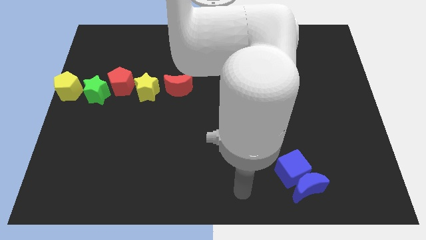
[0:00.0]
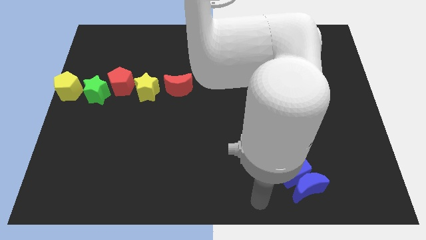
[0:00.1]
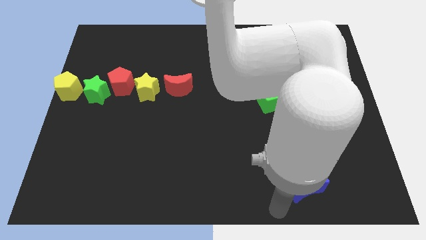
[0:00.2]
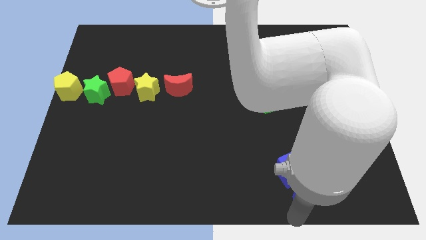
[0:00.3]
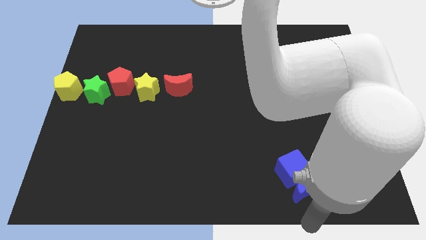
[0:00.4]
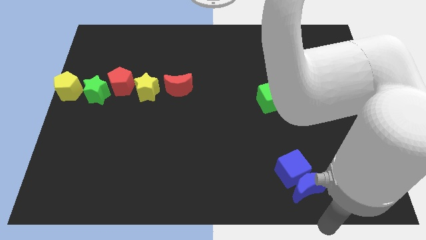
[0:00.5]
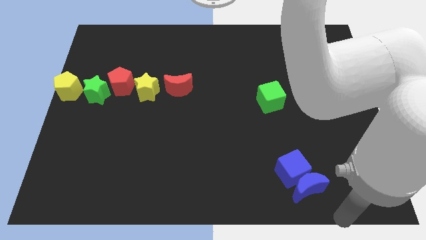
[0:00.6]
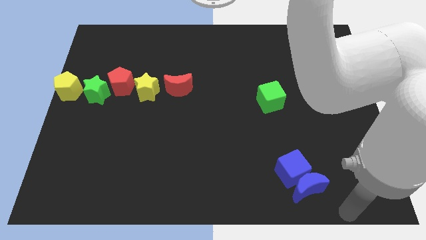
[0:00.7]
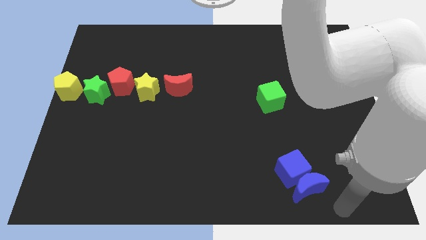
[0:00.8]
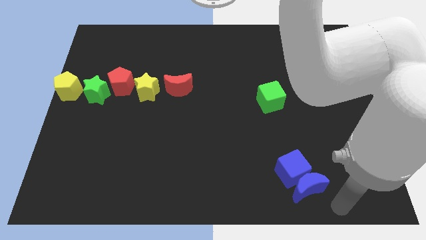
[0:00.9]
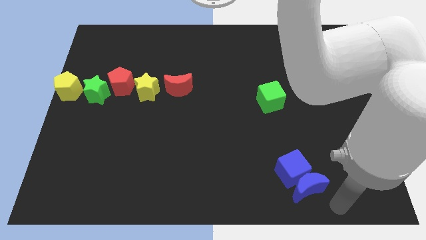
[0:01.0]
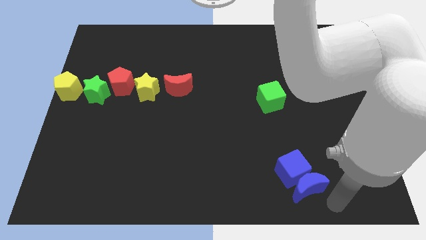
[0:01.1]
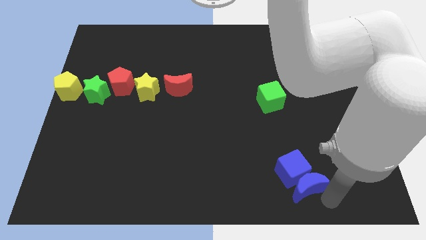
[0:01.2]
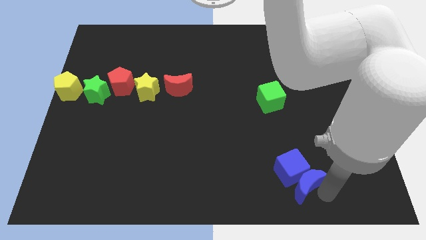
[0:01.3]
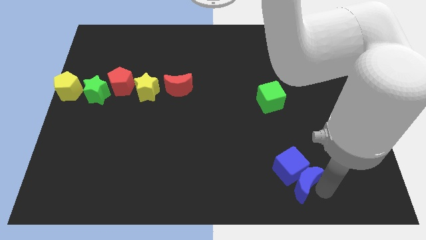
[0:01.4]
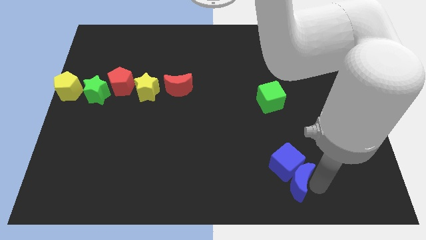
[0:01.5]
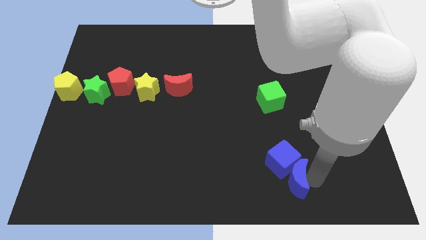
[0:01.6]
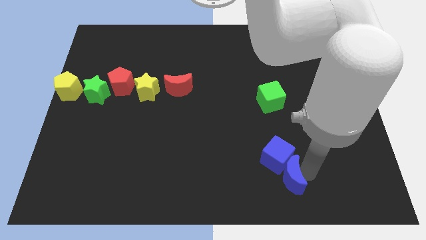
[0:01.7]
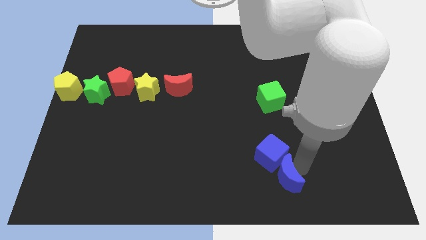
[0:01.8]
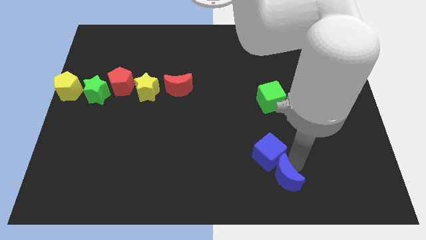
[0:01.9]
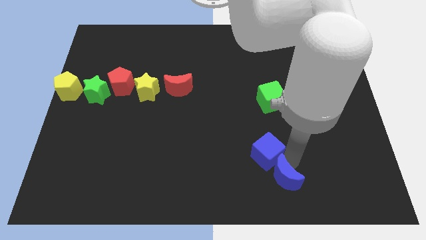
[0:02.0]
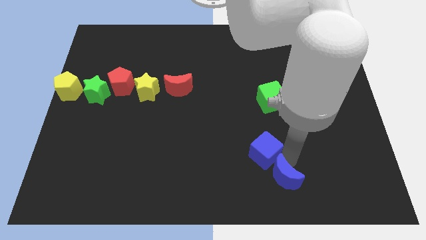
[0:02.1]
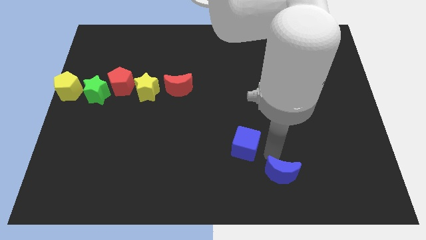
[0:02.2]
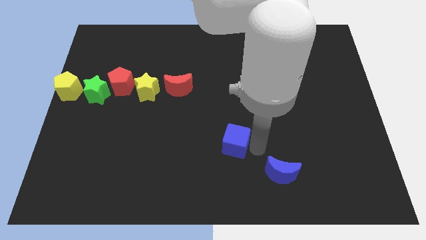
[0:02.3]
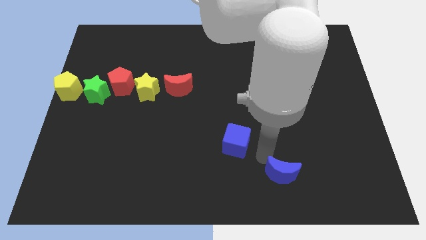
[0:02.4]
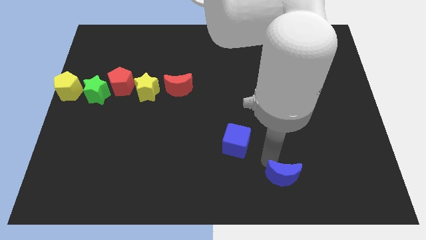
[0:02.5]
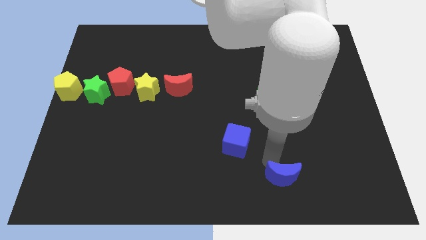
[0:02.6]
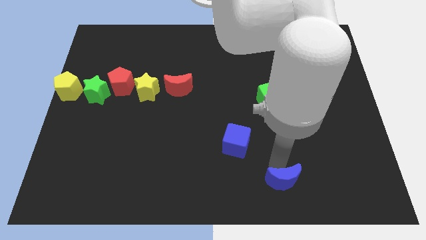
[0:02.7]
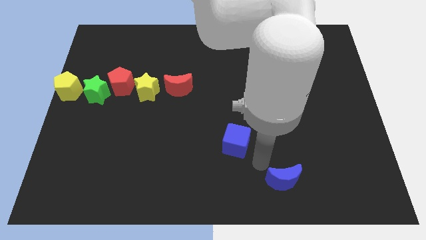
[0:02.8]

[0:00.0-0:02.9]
separate the blue cube with blue moon

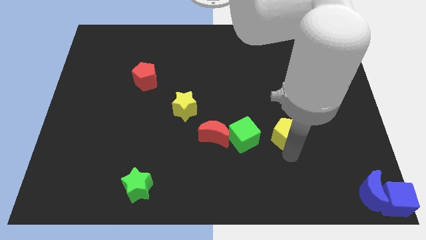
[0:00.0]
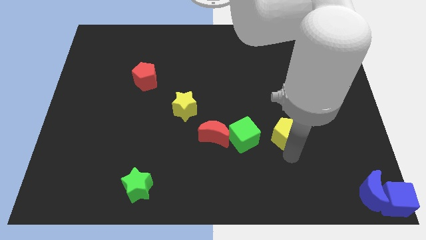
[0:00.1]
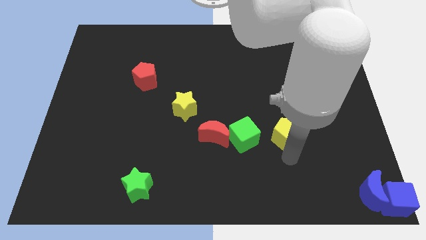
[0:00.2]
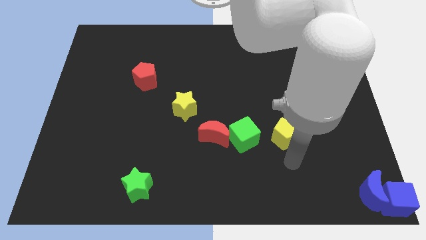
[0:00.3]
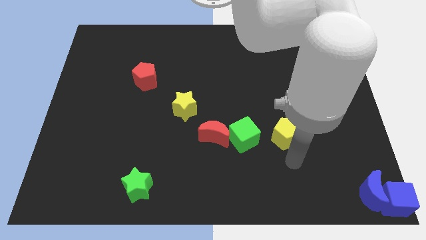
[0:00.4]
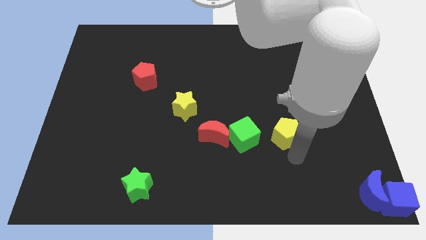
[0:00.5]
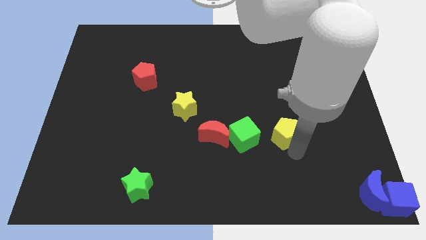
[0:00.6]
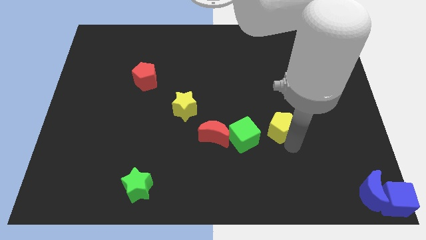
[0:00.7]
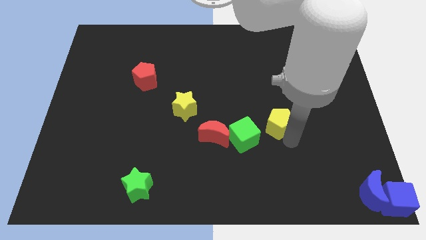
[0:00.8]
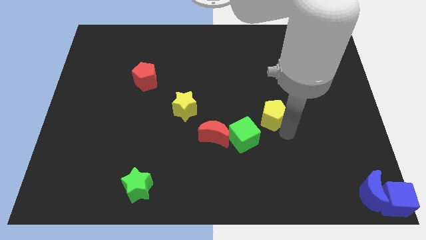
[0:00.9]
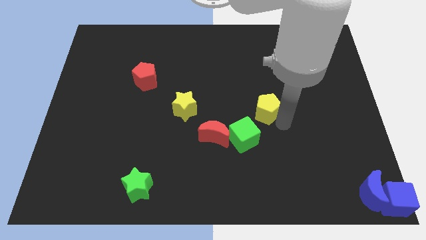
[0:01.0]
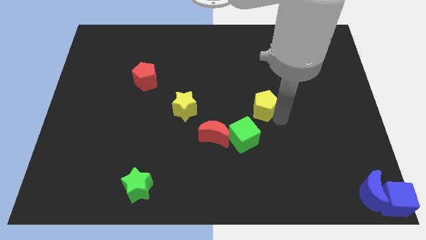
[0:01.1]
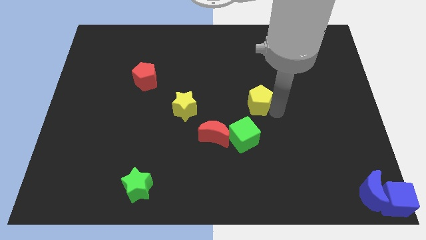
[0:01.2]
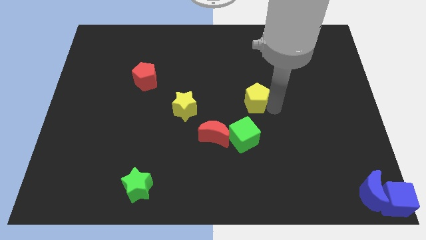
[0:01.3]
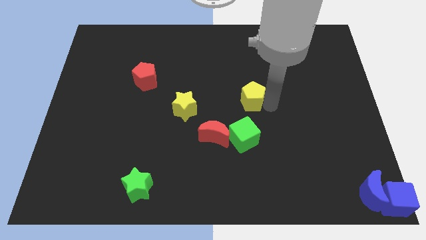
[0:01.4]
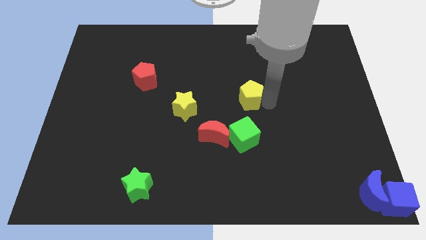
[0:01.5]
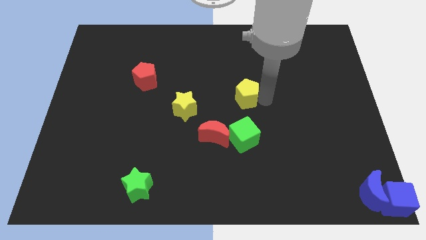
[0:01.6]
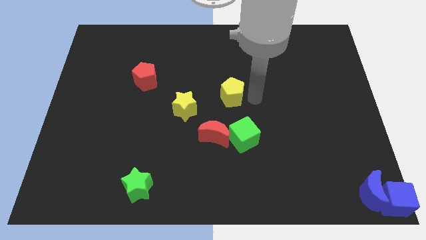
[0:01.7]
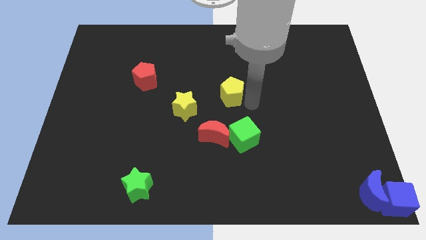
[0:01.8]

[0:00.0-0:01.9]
push the yellow pentagon above the group of blocks

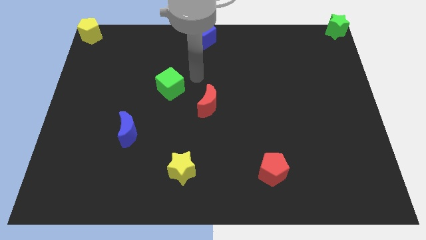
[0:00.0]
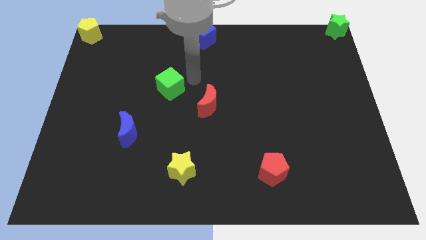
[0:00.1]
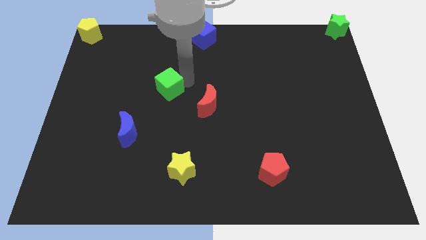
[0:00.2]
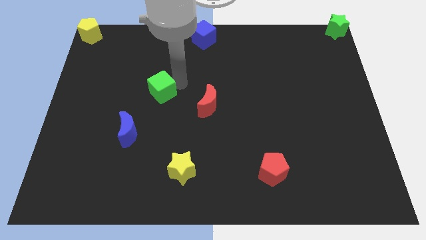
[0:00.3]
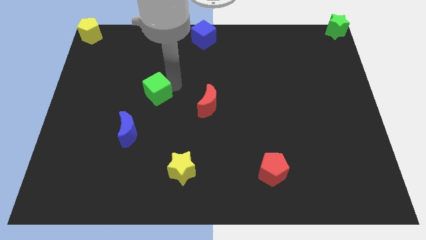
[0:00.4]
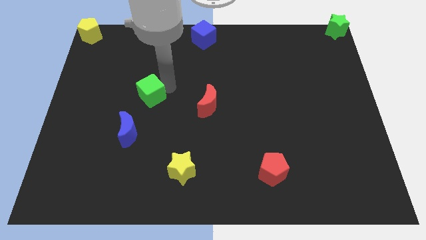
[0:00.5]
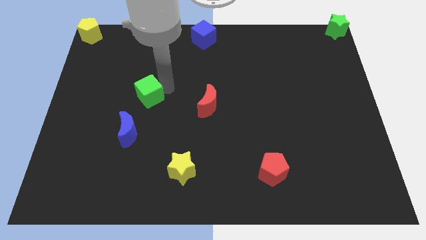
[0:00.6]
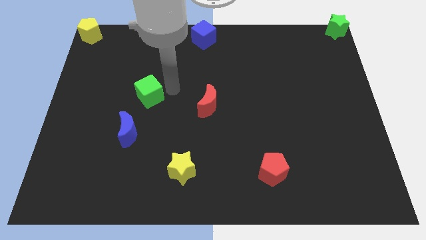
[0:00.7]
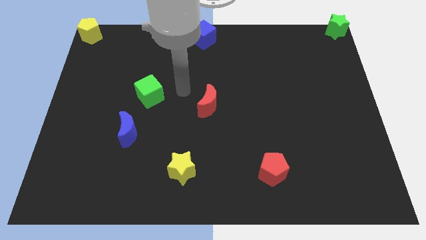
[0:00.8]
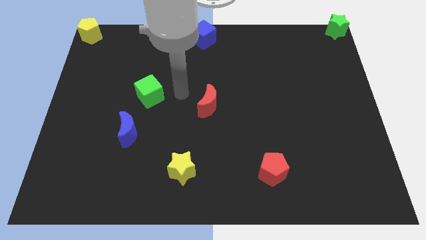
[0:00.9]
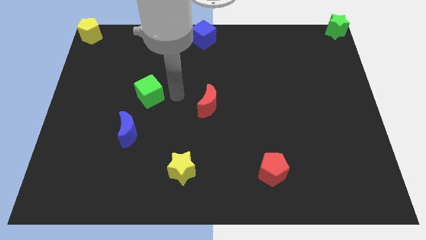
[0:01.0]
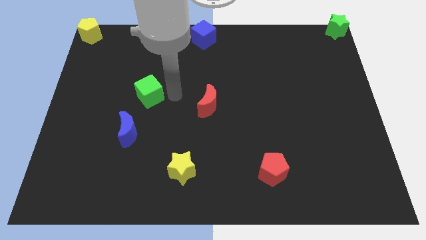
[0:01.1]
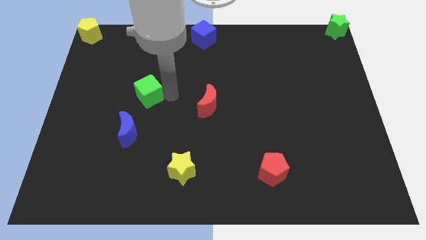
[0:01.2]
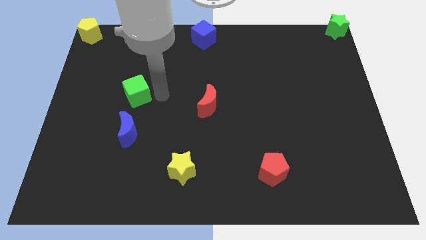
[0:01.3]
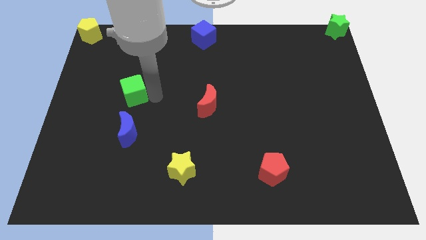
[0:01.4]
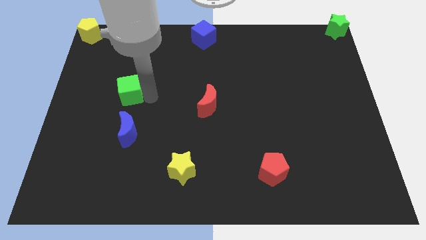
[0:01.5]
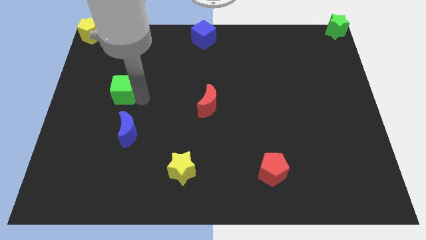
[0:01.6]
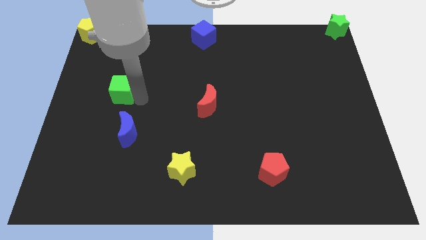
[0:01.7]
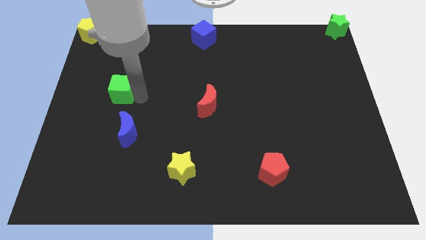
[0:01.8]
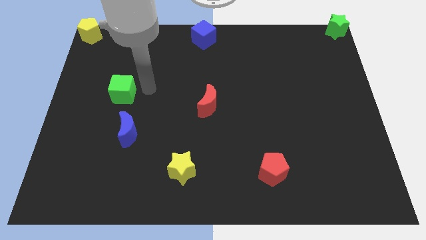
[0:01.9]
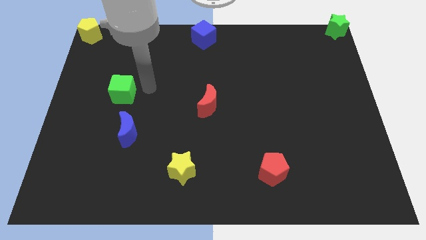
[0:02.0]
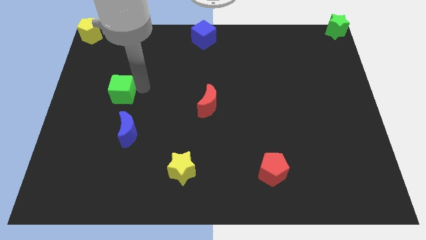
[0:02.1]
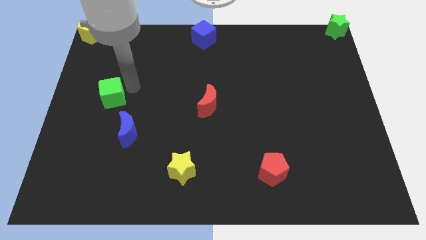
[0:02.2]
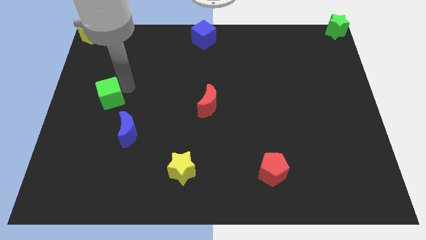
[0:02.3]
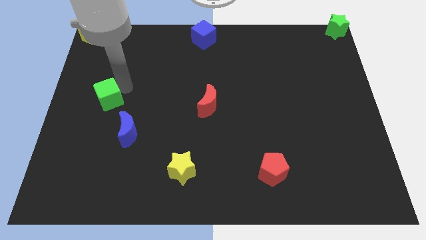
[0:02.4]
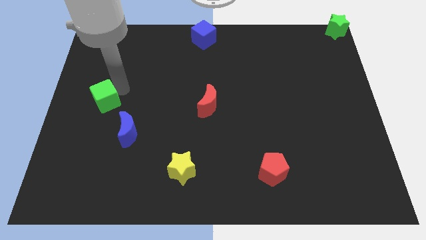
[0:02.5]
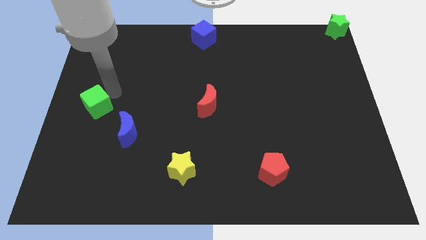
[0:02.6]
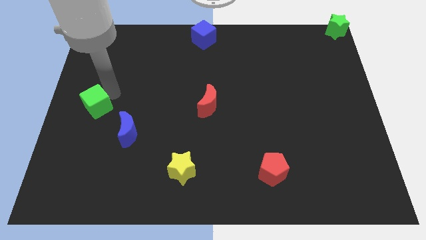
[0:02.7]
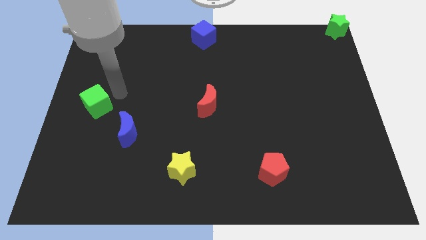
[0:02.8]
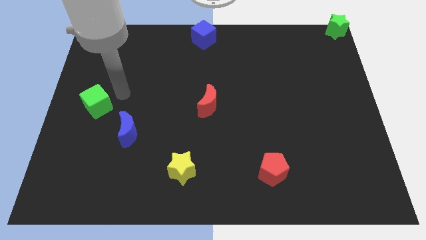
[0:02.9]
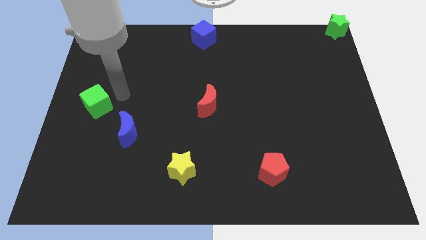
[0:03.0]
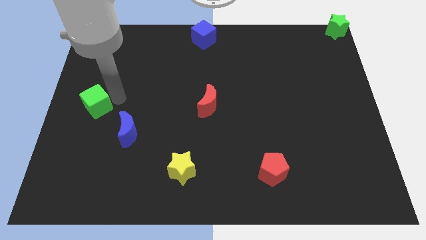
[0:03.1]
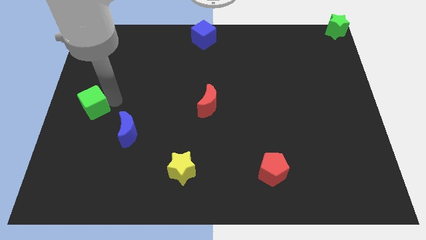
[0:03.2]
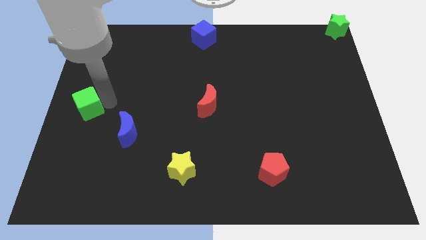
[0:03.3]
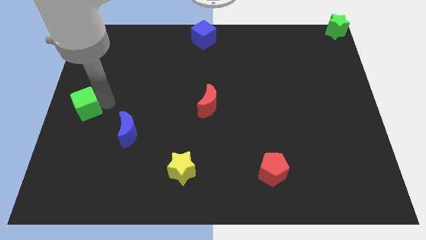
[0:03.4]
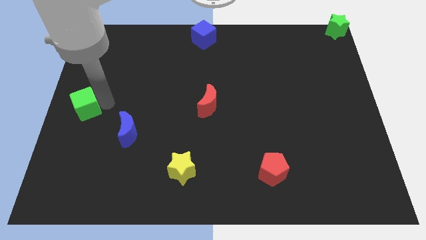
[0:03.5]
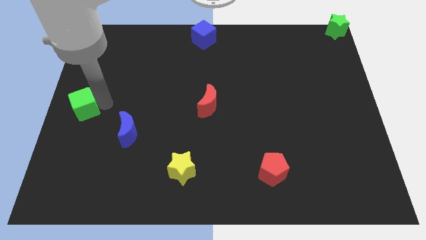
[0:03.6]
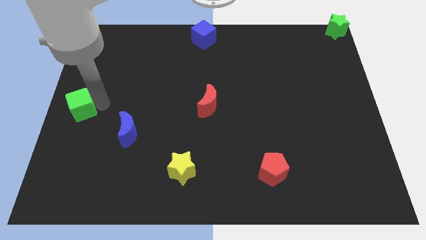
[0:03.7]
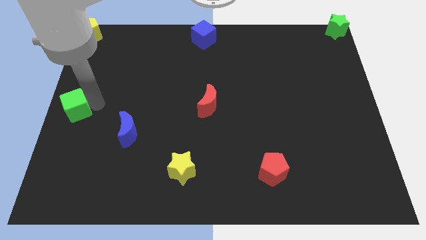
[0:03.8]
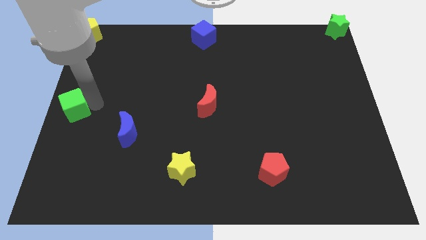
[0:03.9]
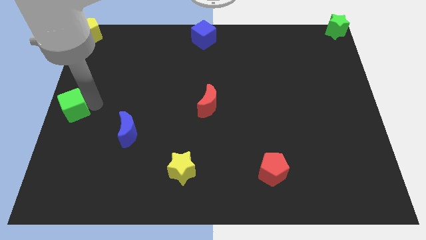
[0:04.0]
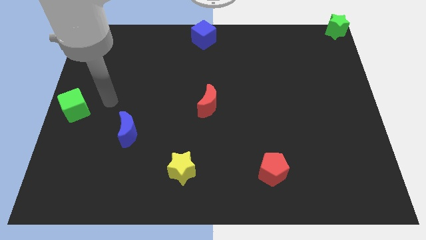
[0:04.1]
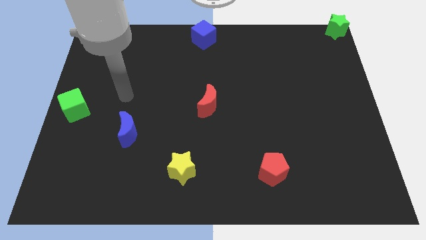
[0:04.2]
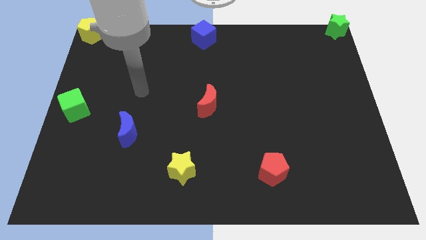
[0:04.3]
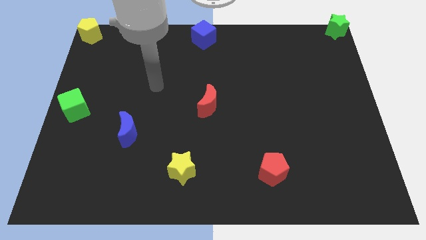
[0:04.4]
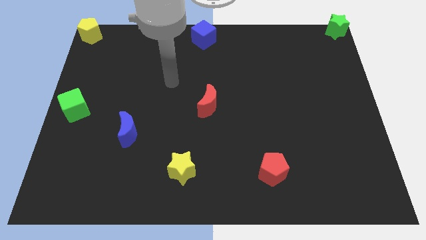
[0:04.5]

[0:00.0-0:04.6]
put the green cube vertically below the yellow pentagon
